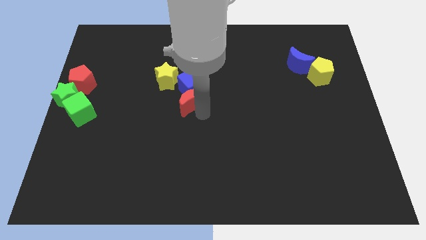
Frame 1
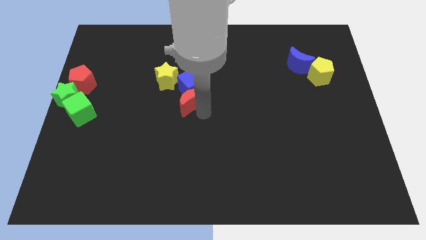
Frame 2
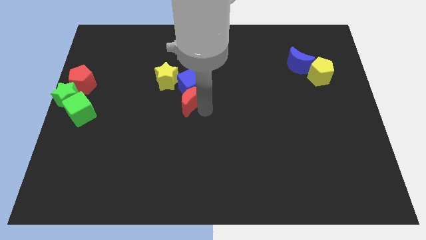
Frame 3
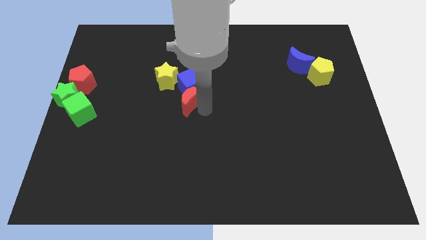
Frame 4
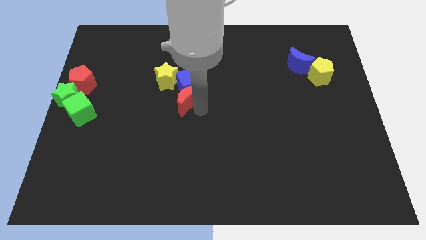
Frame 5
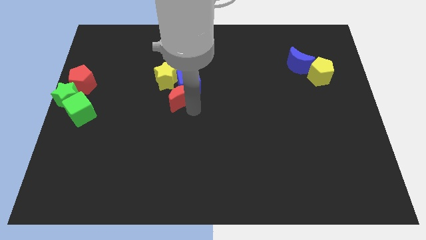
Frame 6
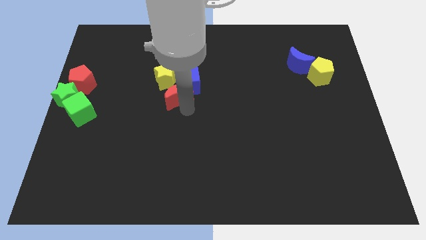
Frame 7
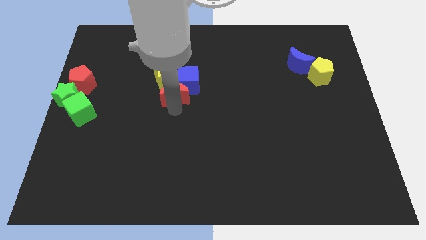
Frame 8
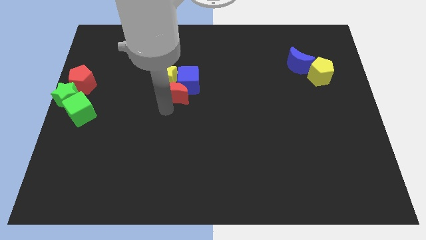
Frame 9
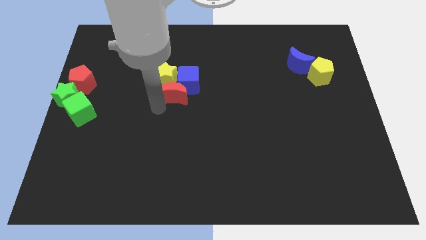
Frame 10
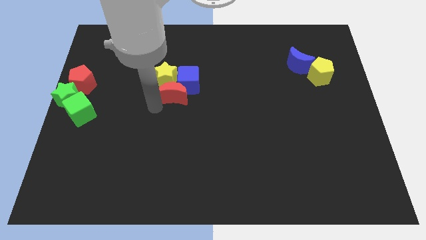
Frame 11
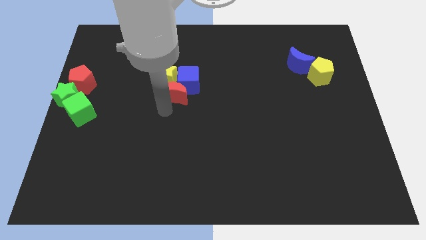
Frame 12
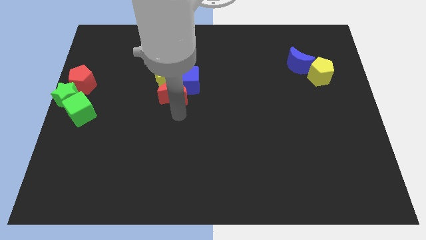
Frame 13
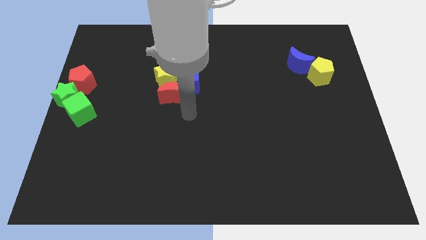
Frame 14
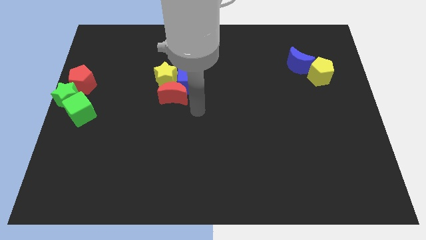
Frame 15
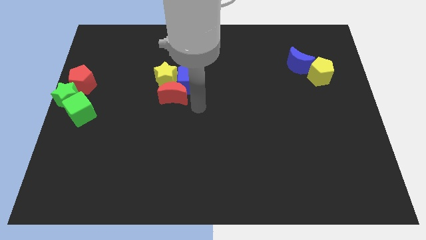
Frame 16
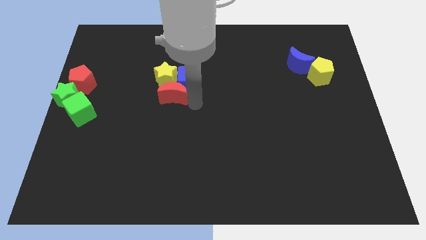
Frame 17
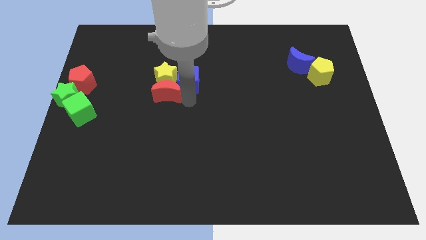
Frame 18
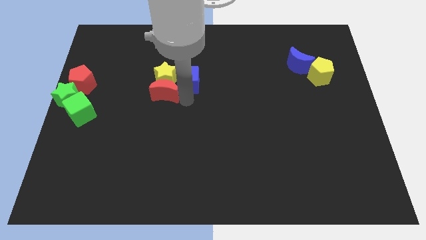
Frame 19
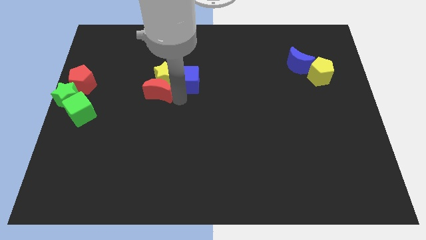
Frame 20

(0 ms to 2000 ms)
place the red moon below the yellow star and blue cube

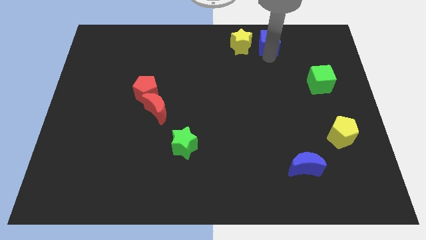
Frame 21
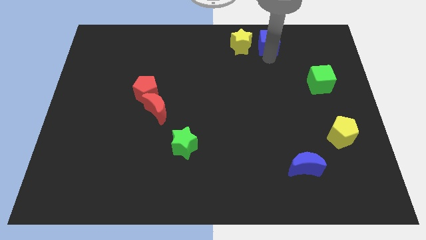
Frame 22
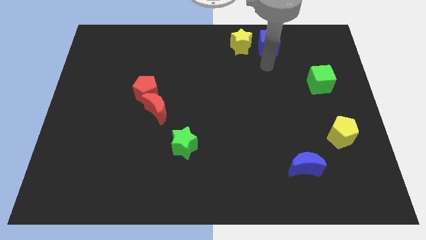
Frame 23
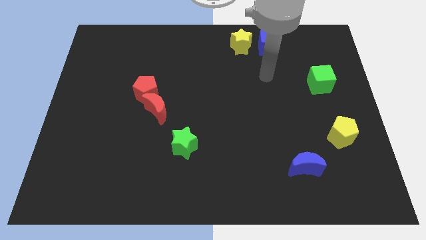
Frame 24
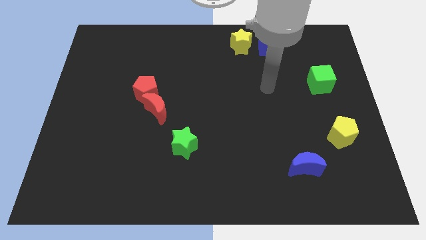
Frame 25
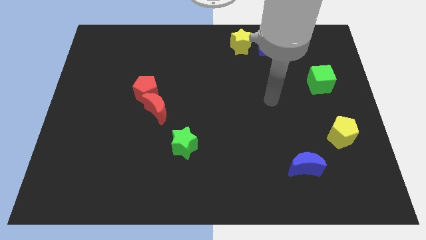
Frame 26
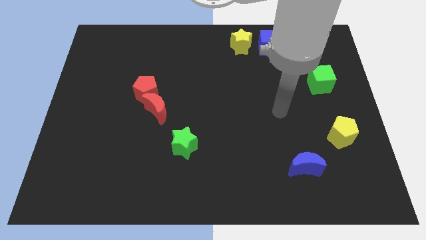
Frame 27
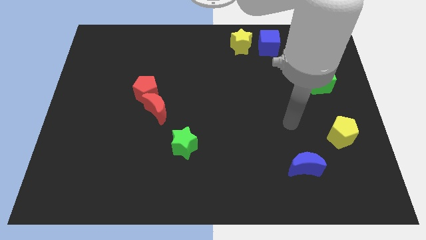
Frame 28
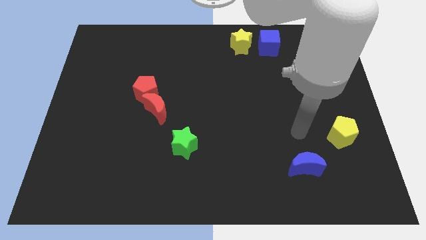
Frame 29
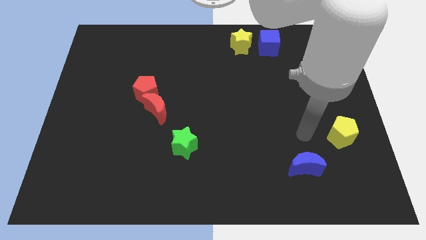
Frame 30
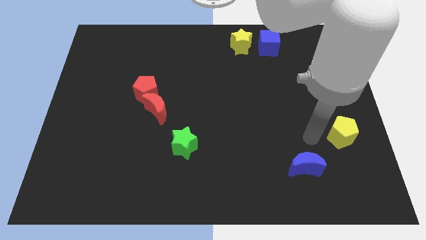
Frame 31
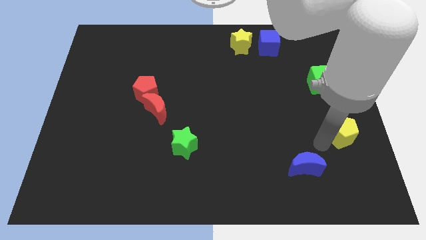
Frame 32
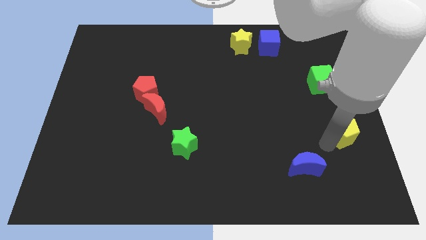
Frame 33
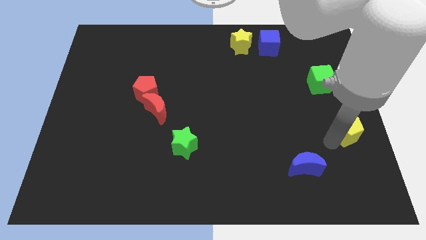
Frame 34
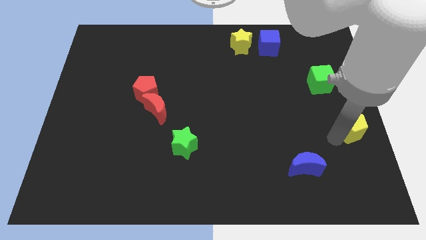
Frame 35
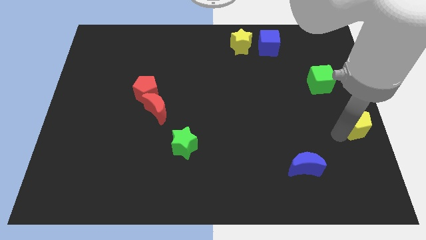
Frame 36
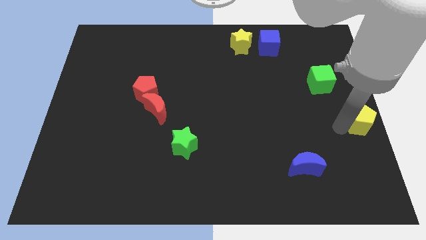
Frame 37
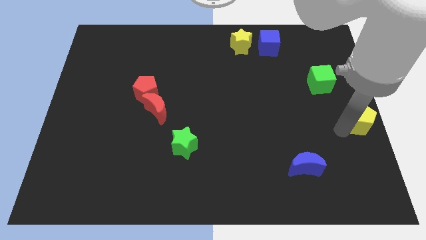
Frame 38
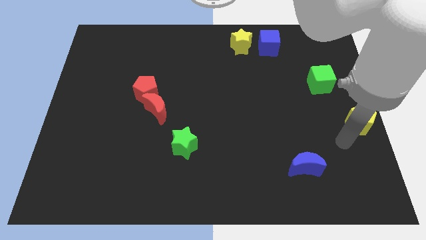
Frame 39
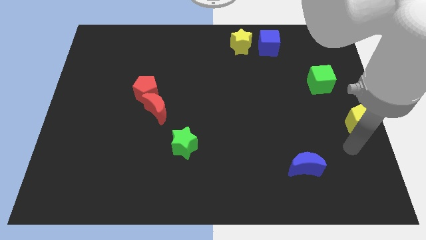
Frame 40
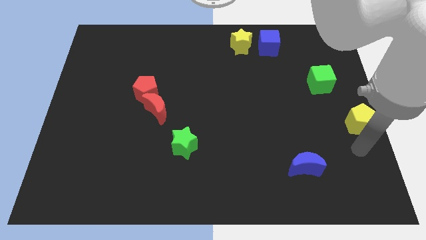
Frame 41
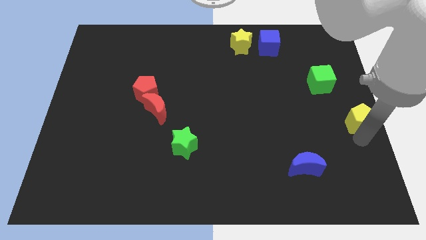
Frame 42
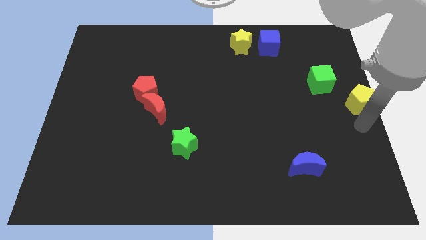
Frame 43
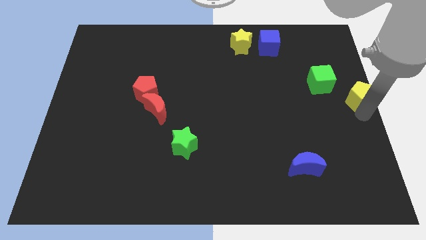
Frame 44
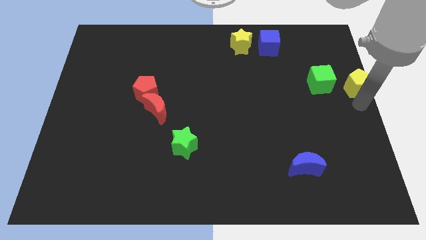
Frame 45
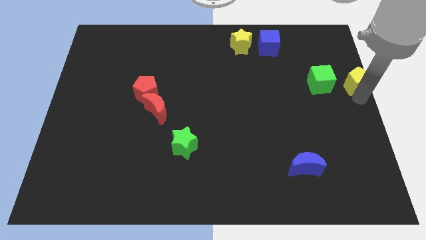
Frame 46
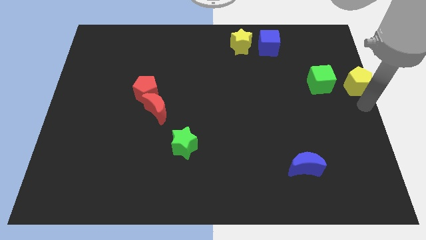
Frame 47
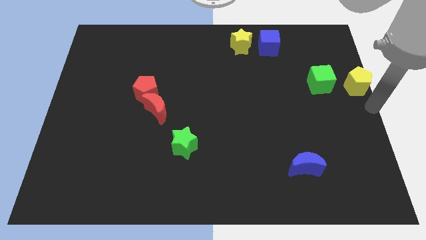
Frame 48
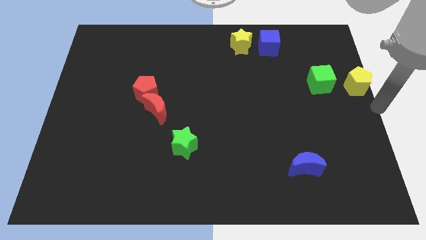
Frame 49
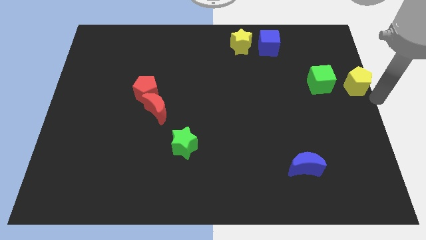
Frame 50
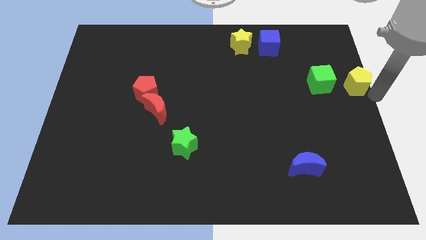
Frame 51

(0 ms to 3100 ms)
slide the yellow pentagon to the right of the green cube

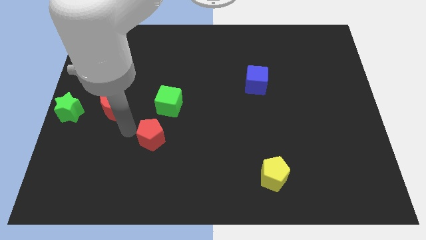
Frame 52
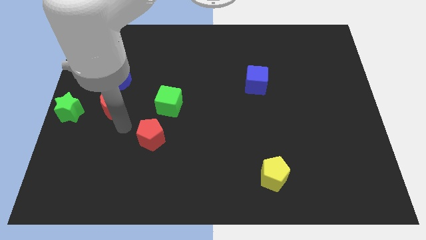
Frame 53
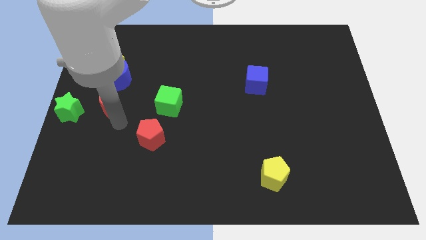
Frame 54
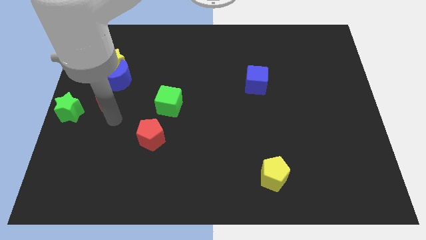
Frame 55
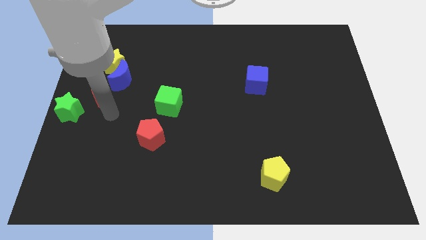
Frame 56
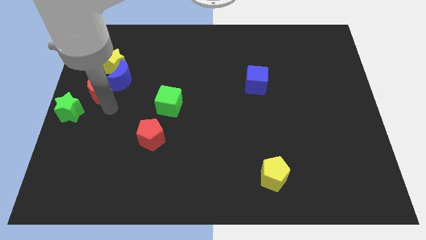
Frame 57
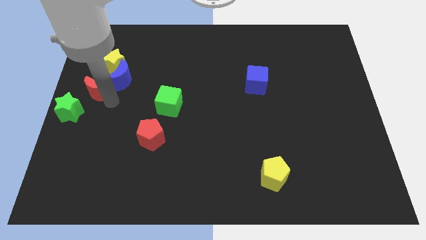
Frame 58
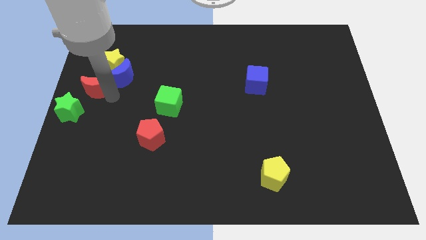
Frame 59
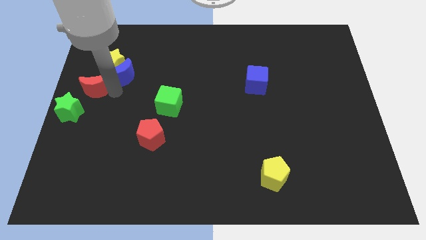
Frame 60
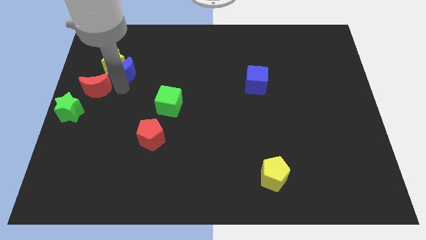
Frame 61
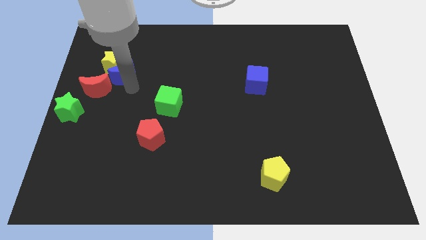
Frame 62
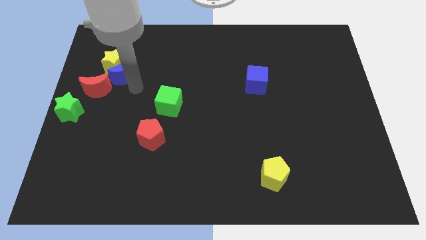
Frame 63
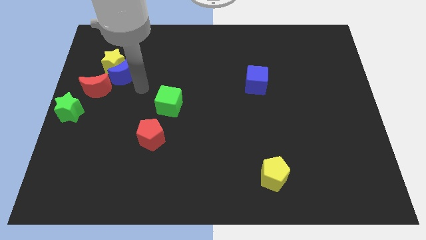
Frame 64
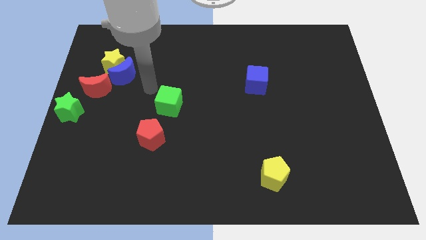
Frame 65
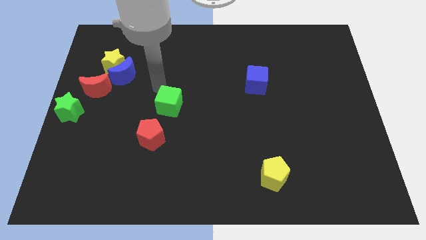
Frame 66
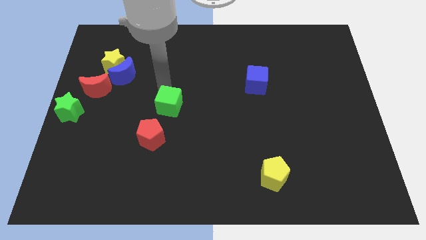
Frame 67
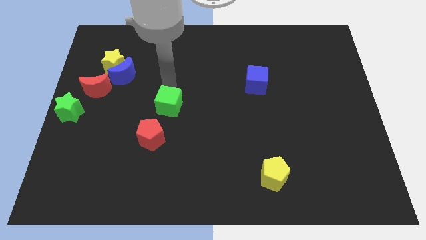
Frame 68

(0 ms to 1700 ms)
move the red moon into the blue moon

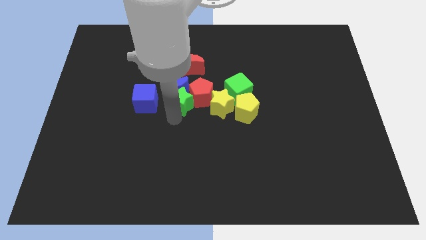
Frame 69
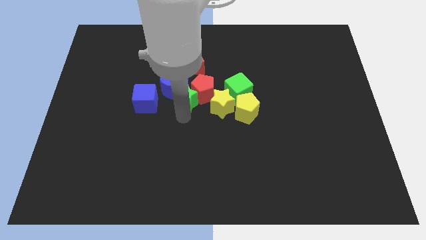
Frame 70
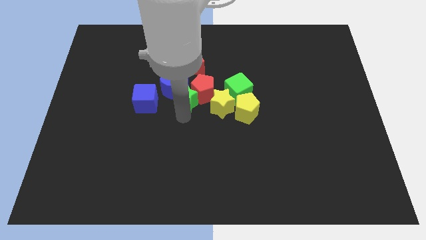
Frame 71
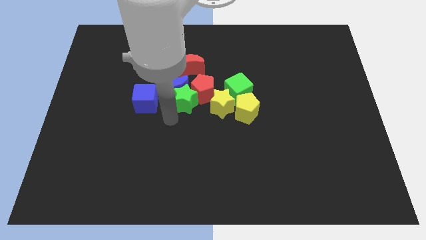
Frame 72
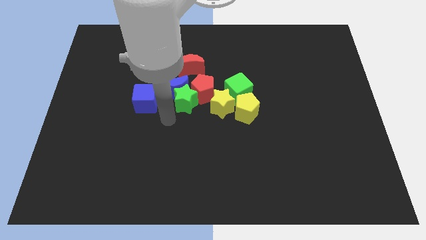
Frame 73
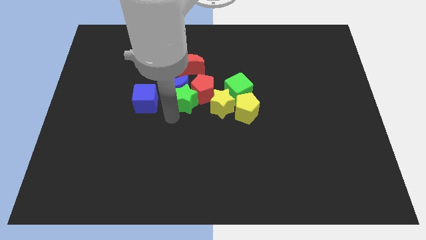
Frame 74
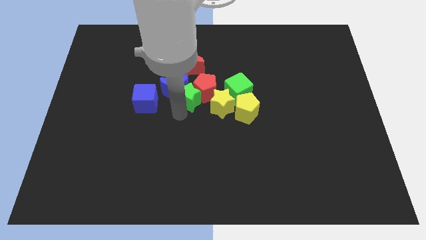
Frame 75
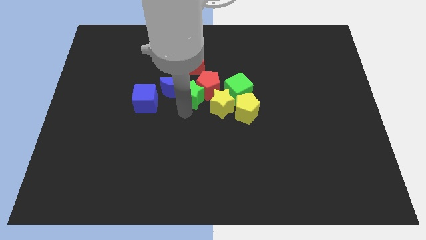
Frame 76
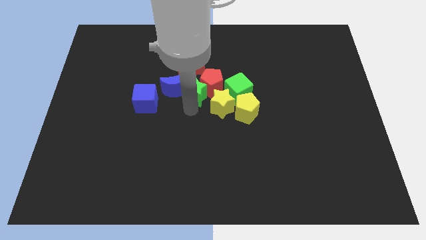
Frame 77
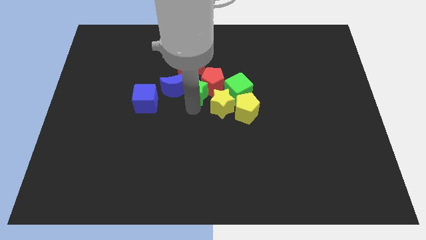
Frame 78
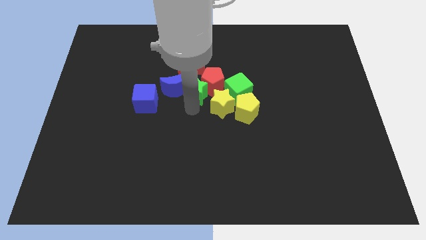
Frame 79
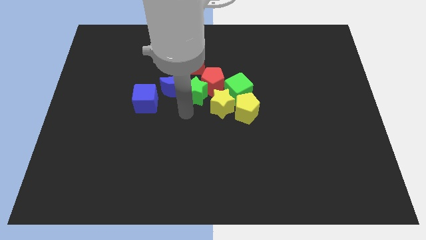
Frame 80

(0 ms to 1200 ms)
push the green star along with the red pentagon slightly right top of the board

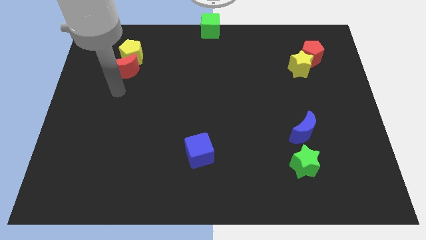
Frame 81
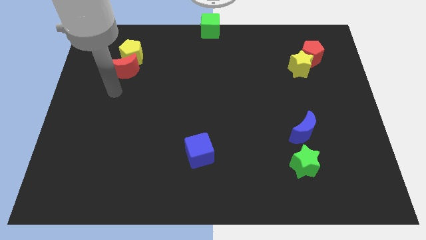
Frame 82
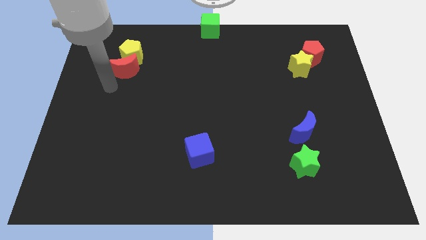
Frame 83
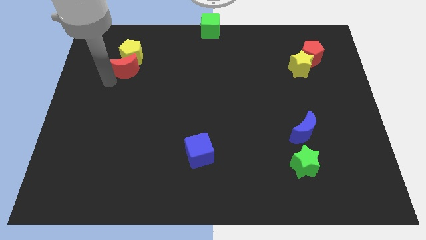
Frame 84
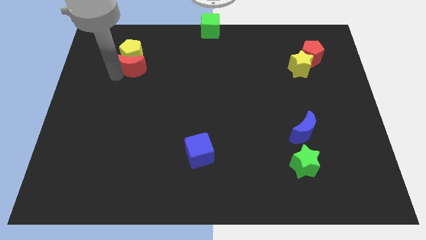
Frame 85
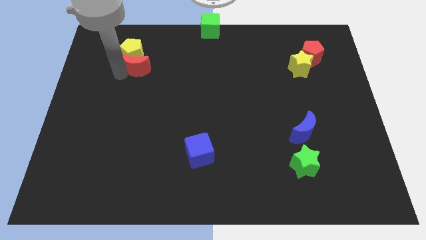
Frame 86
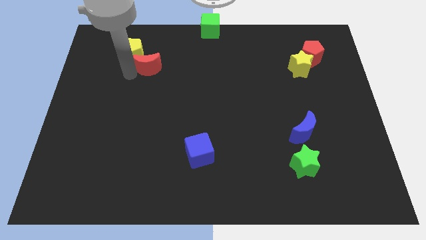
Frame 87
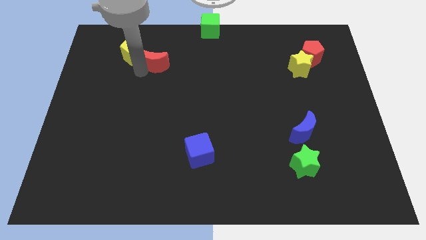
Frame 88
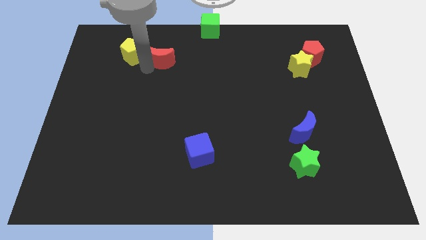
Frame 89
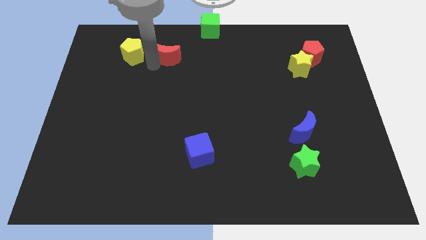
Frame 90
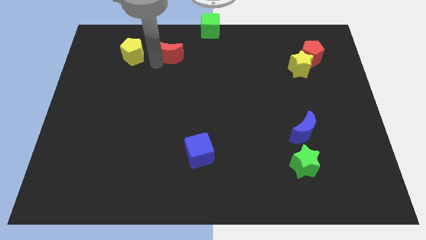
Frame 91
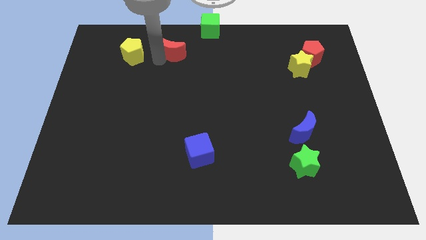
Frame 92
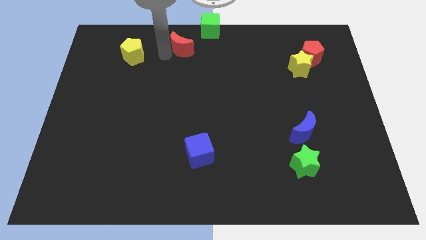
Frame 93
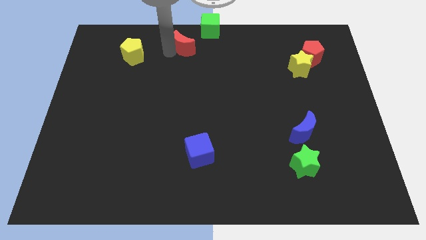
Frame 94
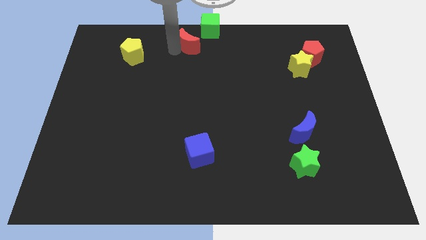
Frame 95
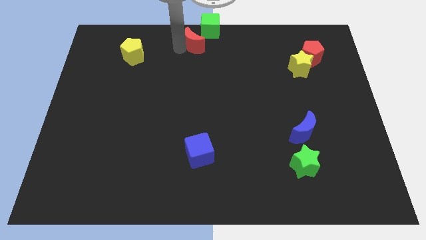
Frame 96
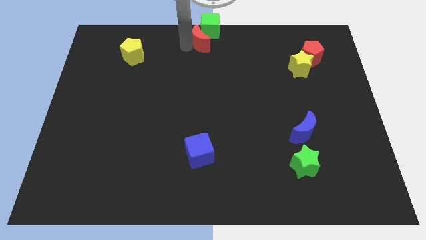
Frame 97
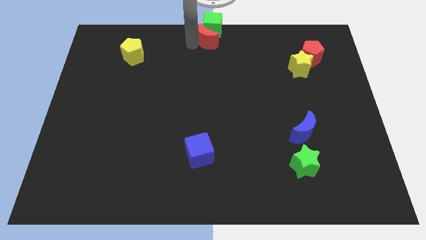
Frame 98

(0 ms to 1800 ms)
placed the red moon at the bottom left side of the green cube
